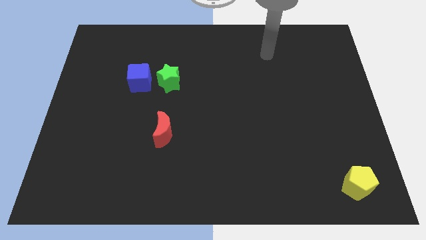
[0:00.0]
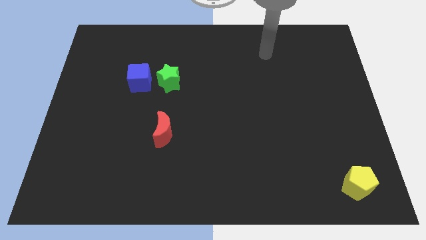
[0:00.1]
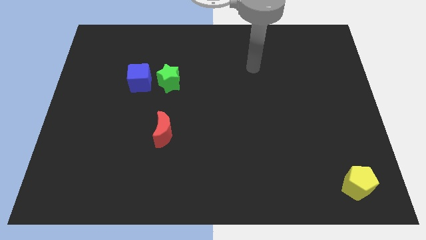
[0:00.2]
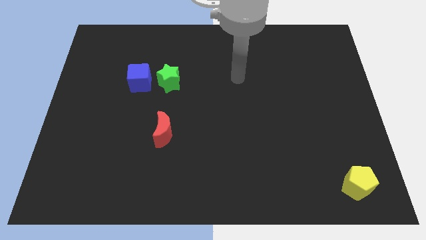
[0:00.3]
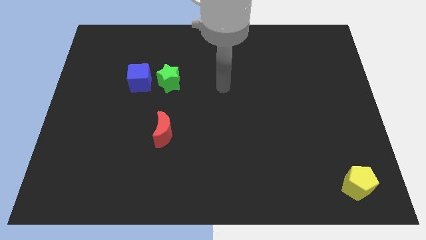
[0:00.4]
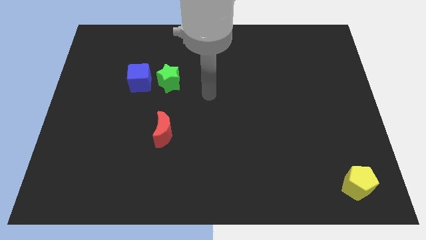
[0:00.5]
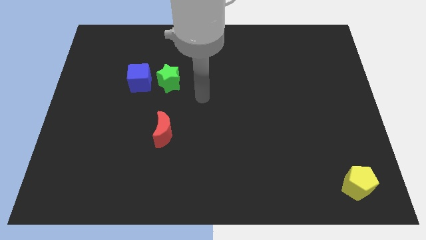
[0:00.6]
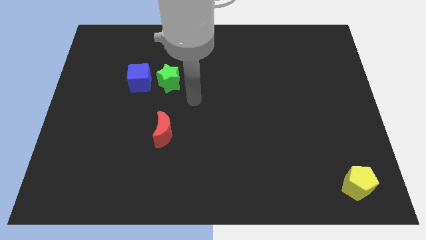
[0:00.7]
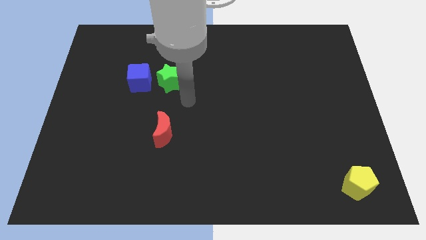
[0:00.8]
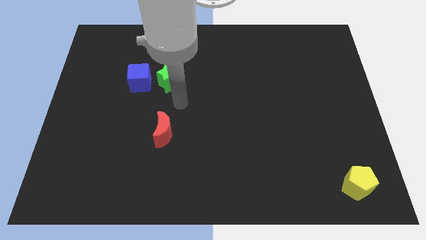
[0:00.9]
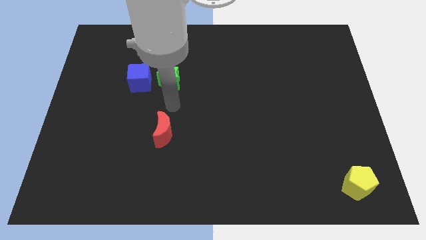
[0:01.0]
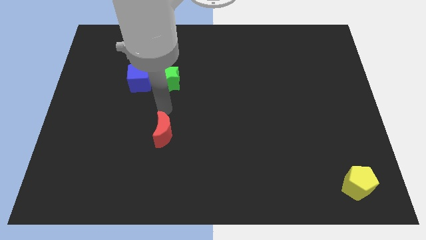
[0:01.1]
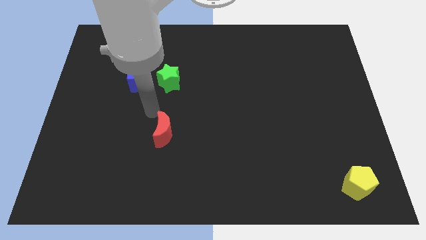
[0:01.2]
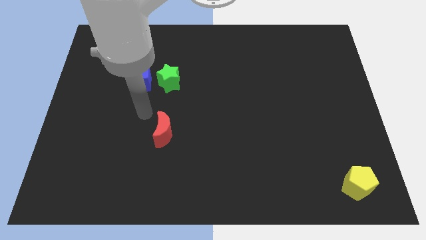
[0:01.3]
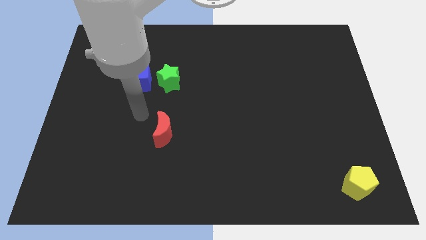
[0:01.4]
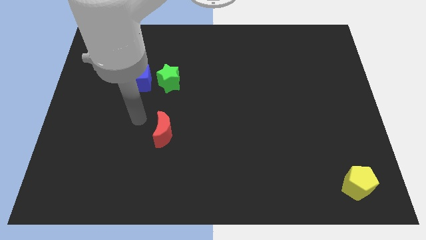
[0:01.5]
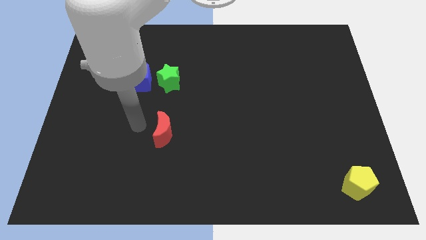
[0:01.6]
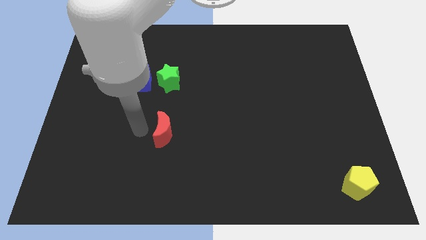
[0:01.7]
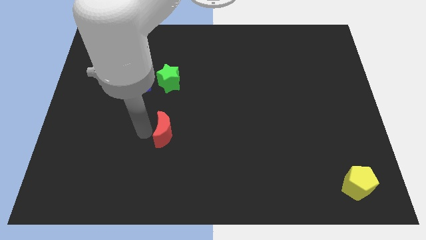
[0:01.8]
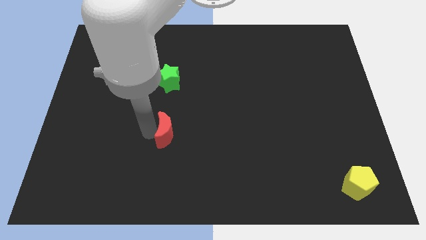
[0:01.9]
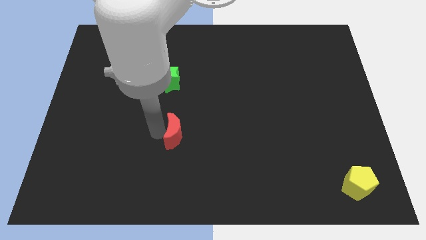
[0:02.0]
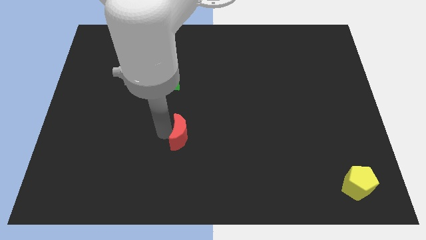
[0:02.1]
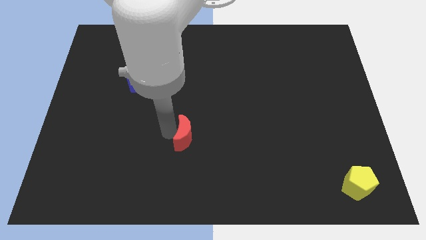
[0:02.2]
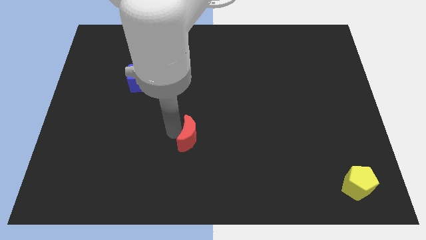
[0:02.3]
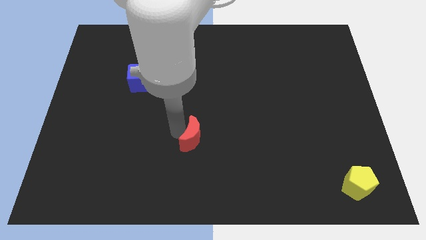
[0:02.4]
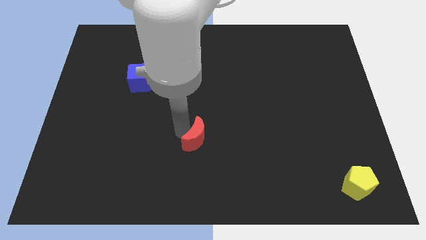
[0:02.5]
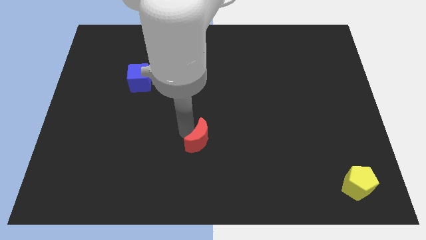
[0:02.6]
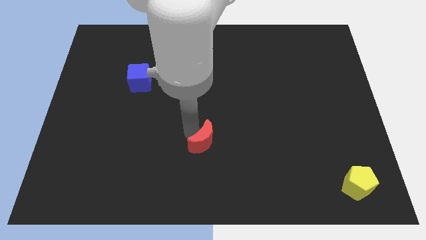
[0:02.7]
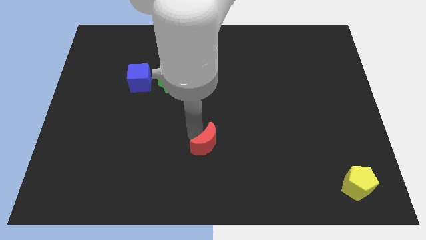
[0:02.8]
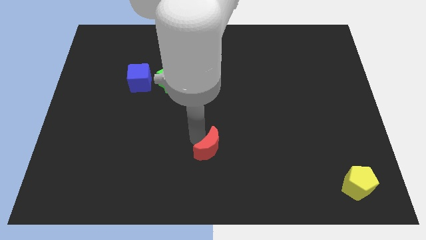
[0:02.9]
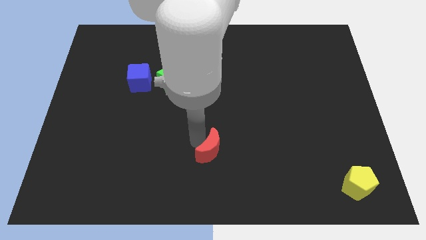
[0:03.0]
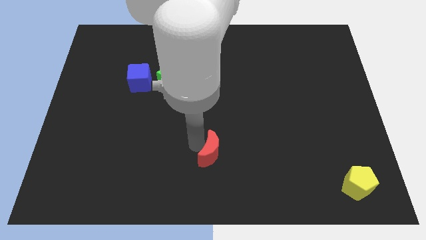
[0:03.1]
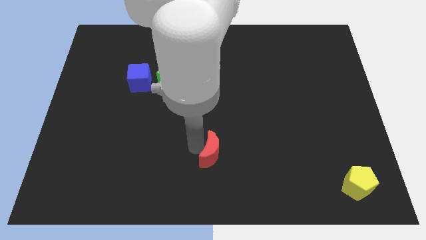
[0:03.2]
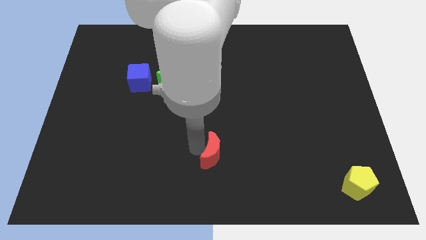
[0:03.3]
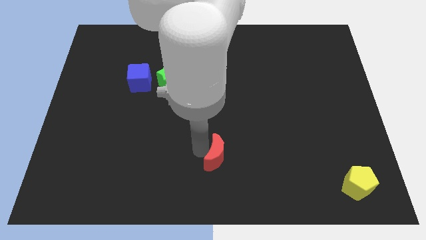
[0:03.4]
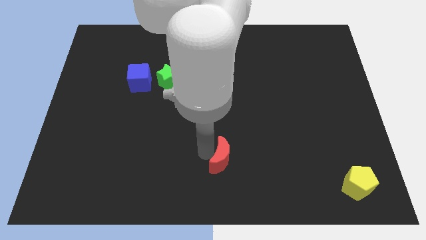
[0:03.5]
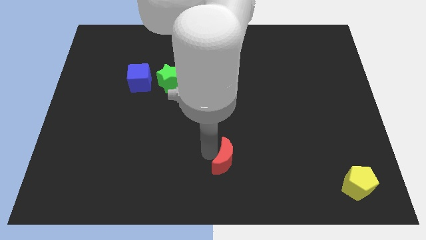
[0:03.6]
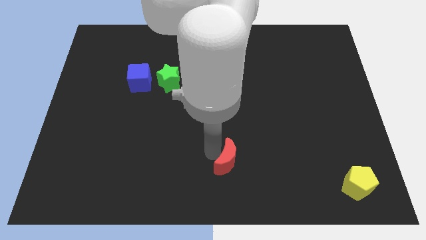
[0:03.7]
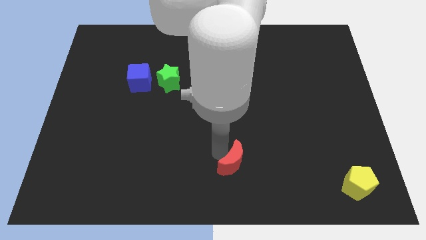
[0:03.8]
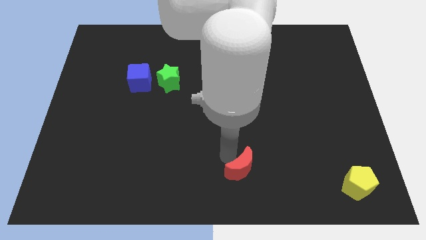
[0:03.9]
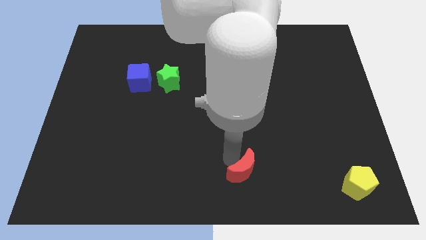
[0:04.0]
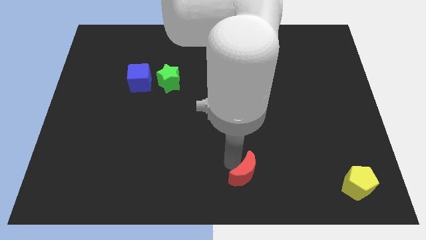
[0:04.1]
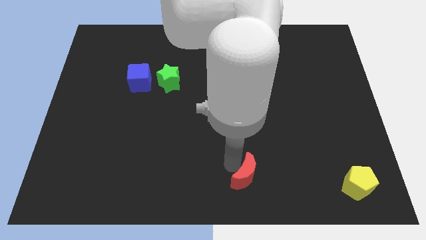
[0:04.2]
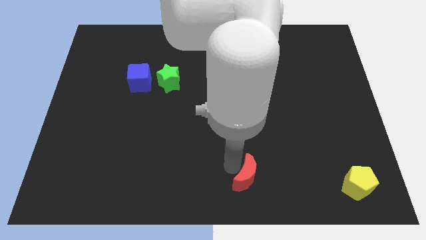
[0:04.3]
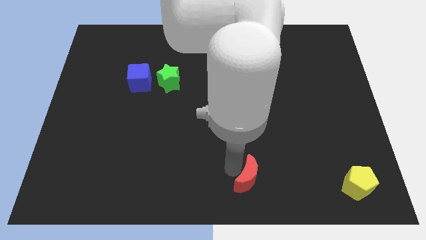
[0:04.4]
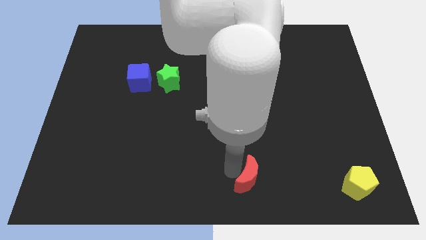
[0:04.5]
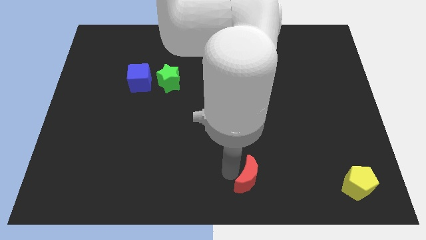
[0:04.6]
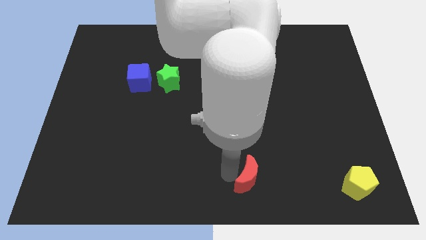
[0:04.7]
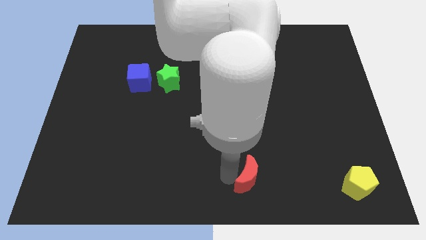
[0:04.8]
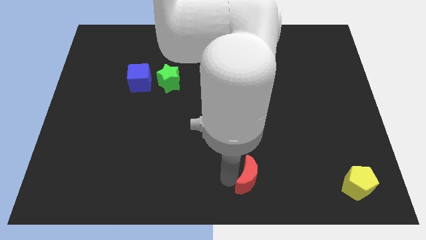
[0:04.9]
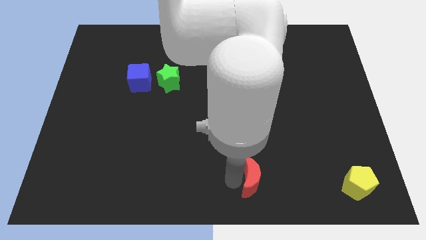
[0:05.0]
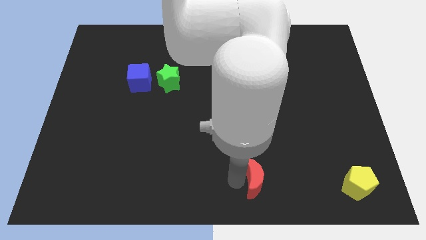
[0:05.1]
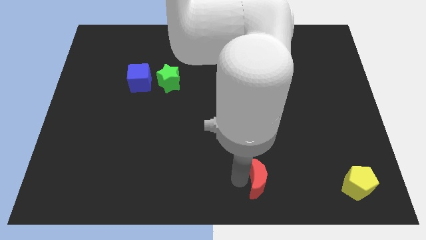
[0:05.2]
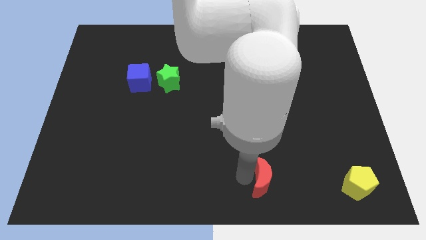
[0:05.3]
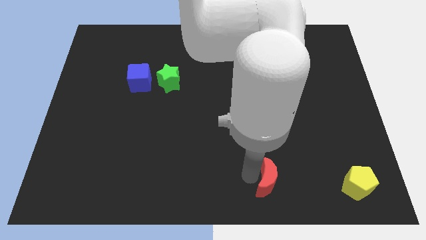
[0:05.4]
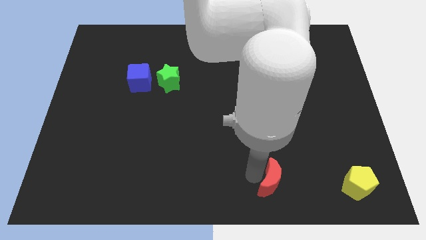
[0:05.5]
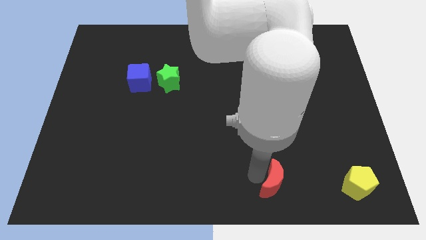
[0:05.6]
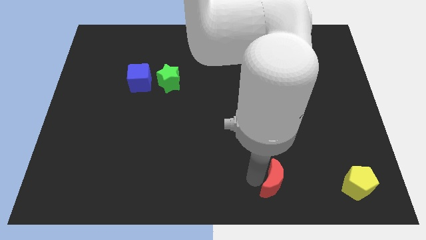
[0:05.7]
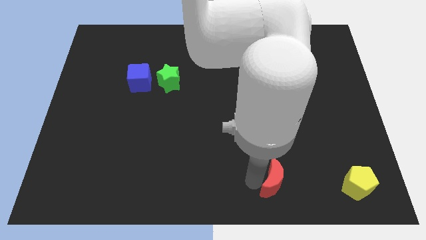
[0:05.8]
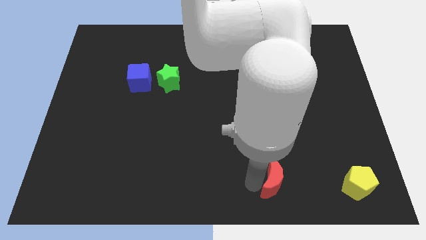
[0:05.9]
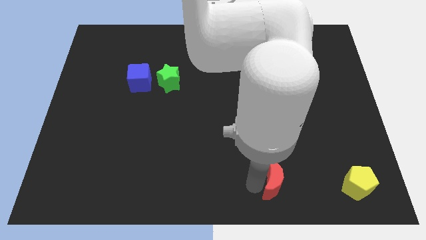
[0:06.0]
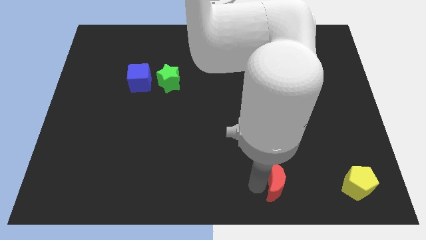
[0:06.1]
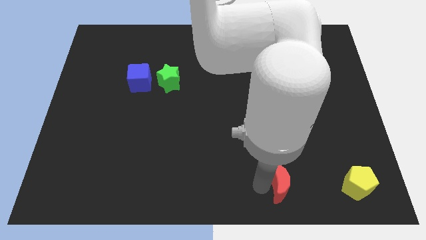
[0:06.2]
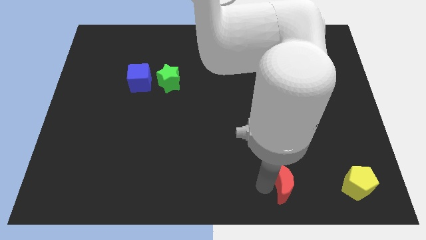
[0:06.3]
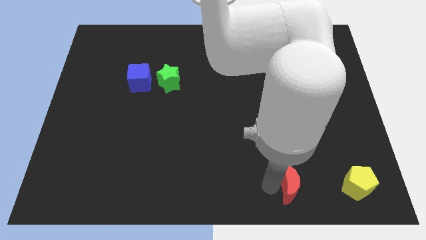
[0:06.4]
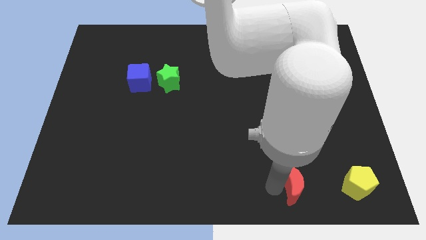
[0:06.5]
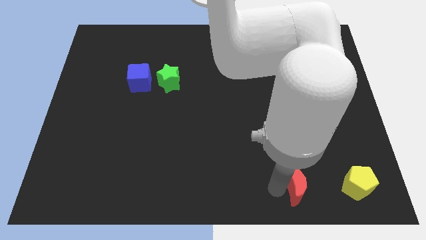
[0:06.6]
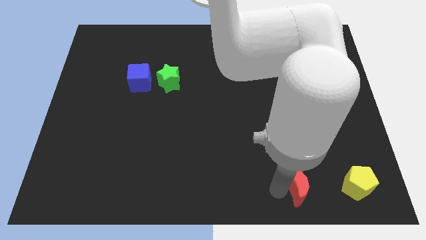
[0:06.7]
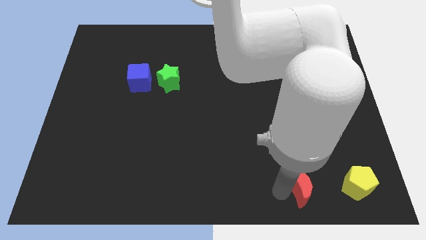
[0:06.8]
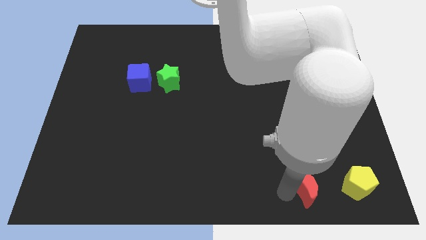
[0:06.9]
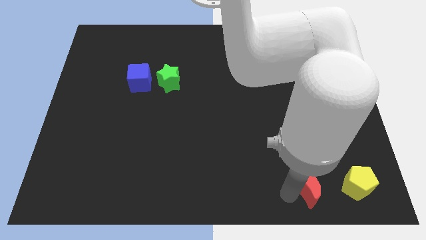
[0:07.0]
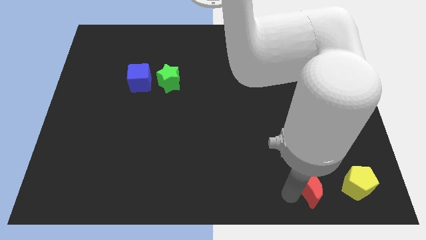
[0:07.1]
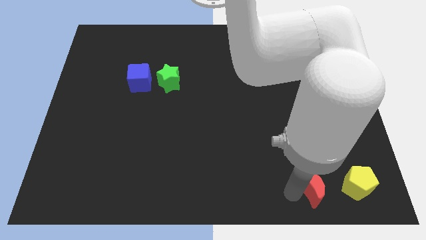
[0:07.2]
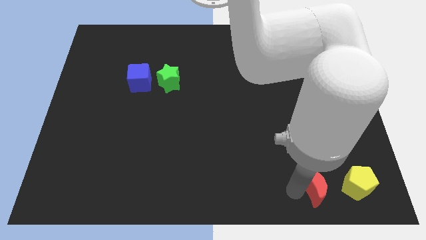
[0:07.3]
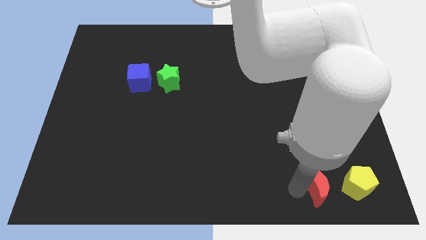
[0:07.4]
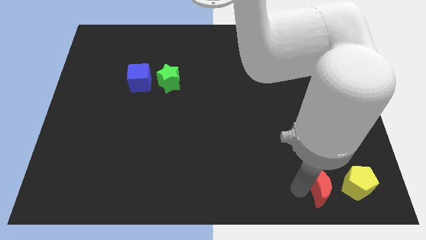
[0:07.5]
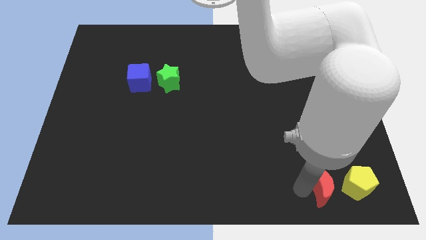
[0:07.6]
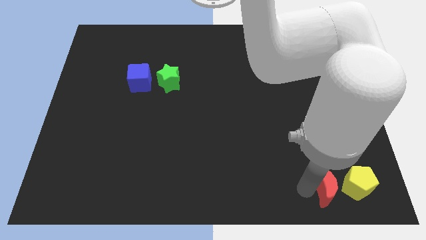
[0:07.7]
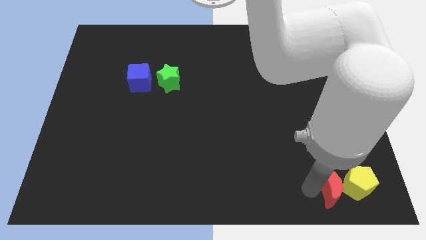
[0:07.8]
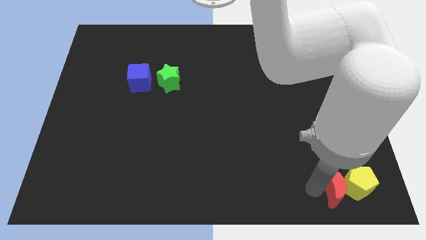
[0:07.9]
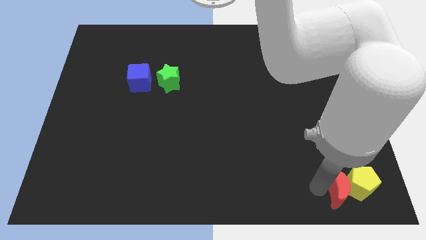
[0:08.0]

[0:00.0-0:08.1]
put the red block next to the yellow block

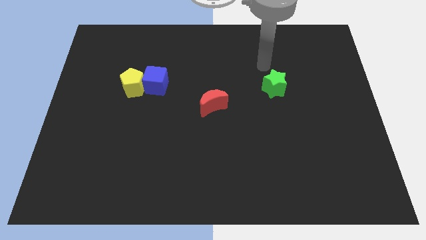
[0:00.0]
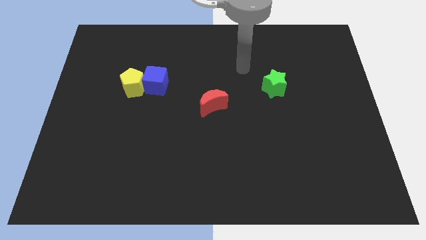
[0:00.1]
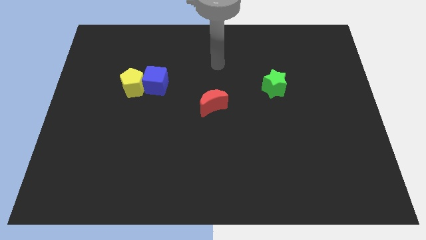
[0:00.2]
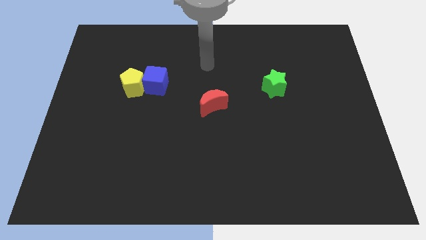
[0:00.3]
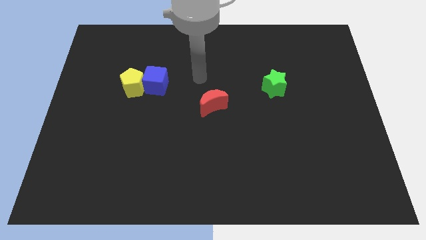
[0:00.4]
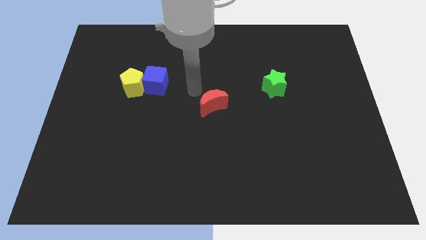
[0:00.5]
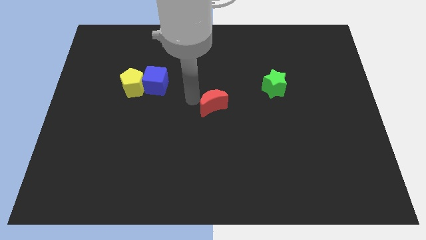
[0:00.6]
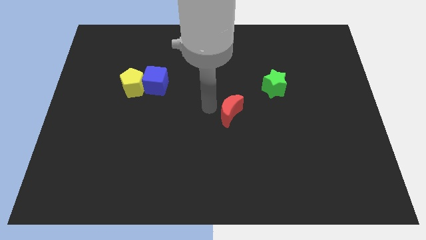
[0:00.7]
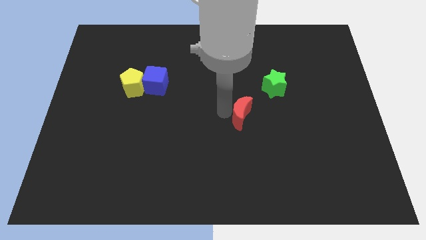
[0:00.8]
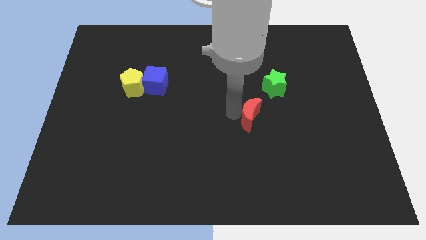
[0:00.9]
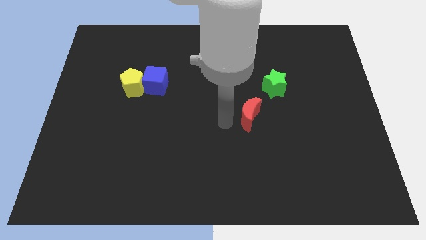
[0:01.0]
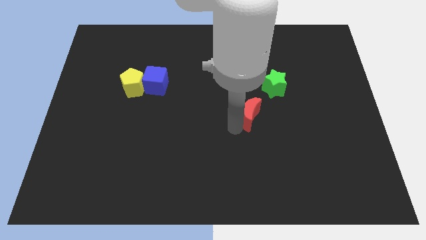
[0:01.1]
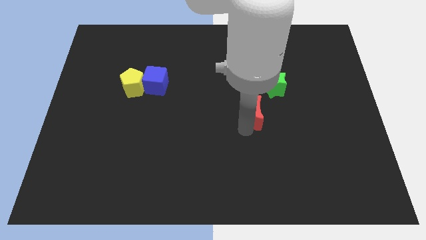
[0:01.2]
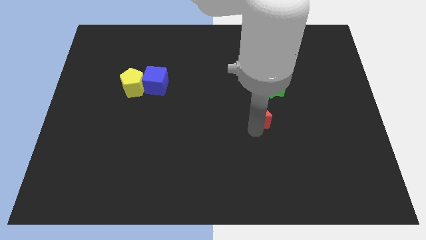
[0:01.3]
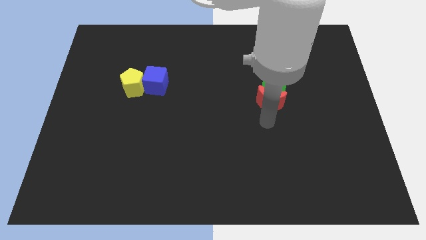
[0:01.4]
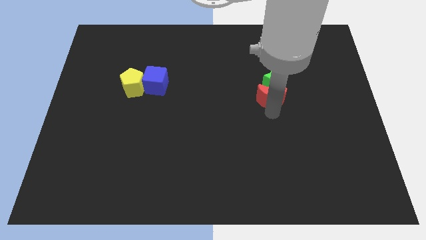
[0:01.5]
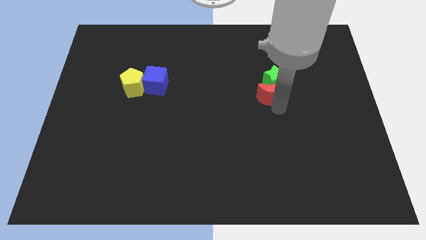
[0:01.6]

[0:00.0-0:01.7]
slide the red moon towards the green block
